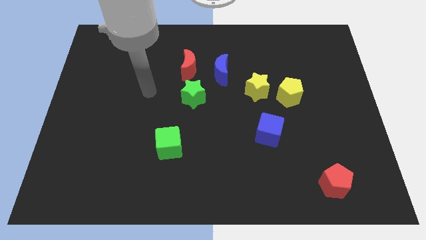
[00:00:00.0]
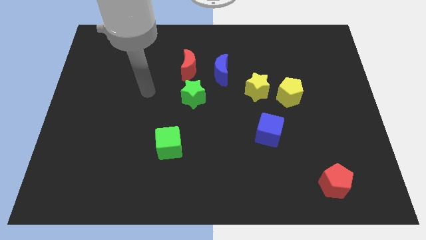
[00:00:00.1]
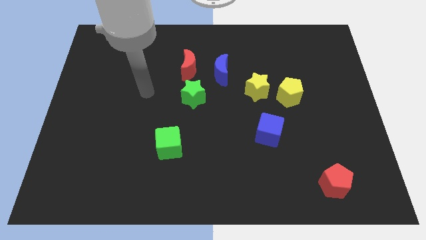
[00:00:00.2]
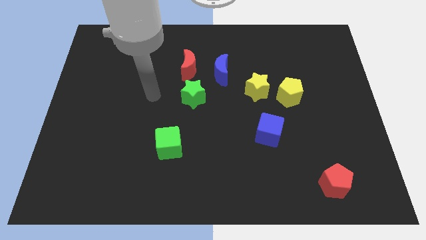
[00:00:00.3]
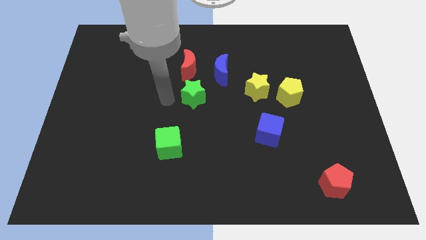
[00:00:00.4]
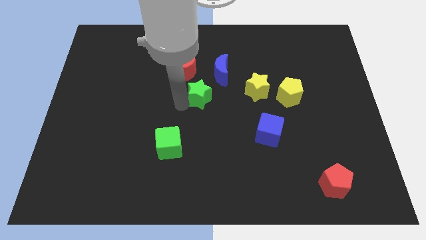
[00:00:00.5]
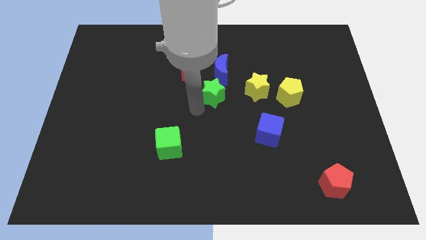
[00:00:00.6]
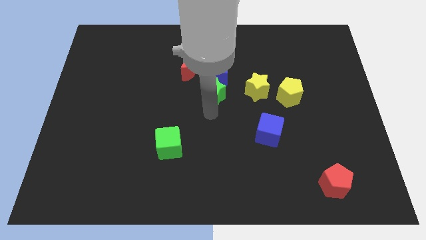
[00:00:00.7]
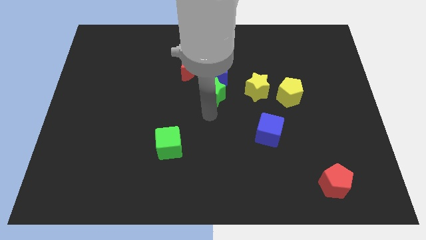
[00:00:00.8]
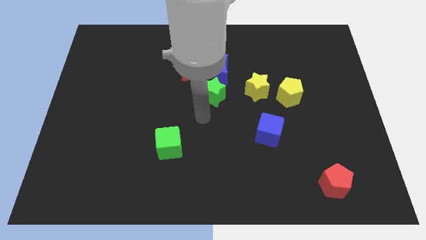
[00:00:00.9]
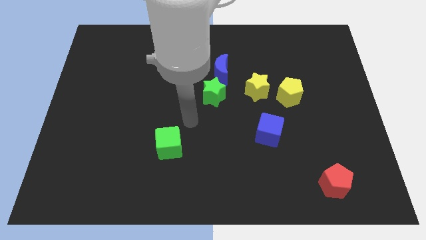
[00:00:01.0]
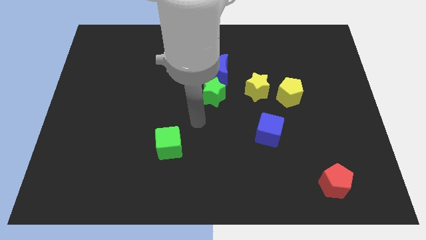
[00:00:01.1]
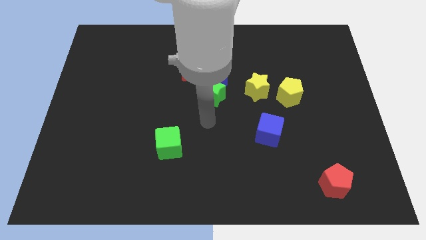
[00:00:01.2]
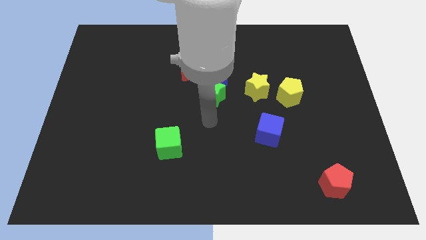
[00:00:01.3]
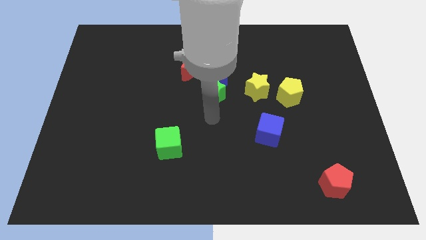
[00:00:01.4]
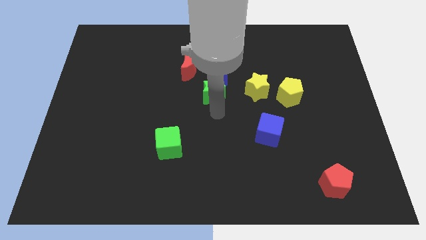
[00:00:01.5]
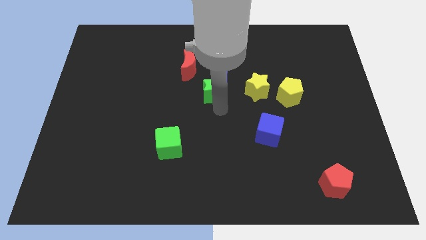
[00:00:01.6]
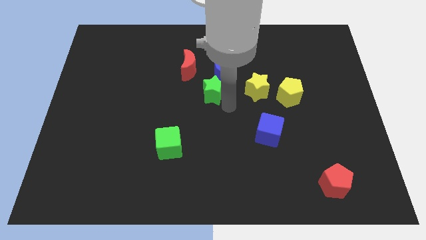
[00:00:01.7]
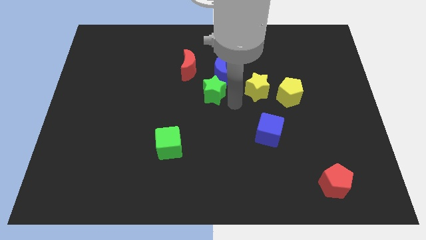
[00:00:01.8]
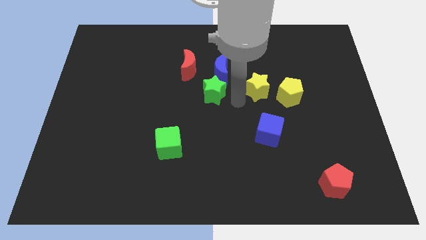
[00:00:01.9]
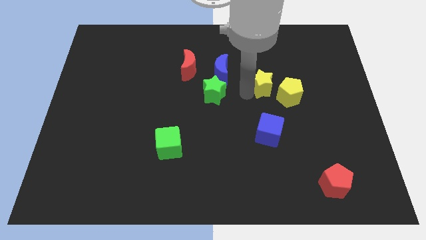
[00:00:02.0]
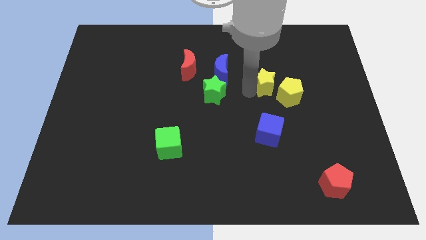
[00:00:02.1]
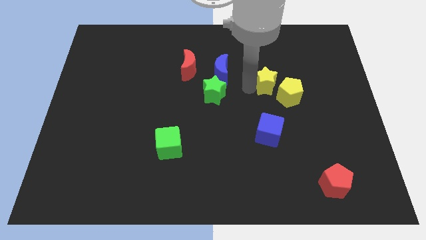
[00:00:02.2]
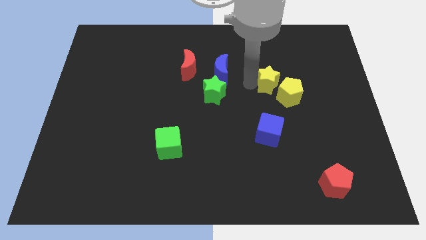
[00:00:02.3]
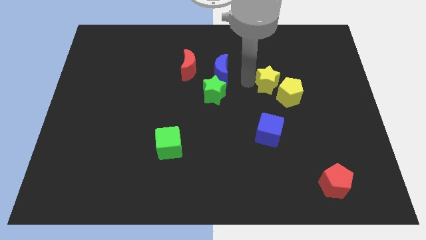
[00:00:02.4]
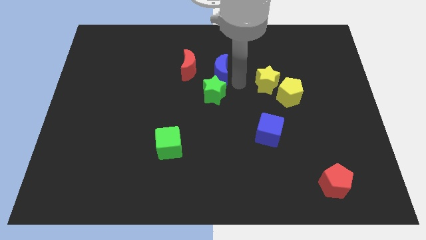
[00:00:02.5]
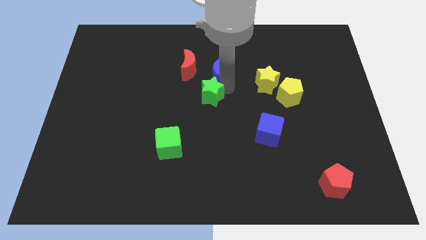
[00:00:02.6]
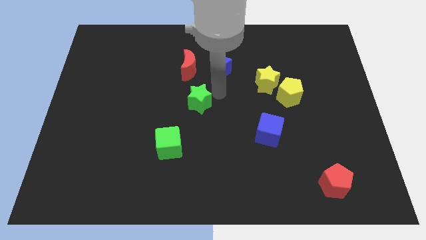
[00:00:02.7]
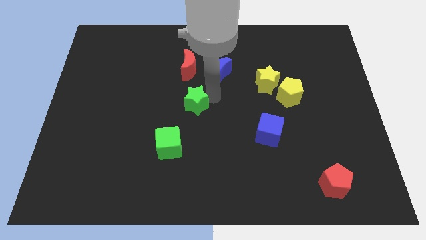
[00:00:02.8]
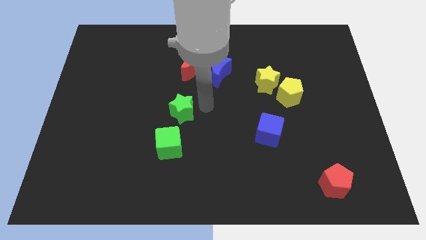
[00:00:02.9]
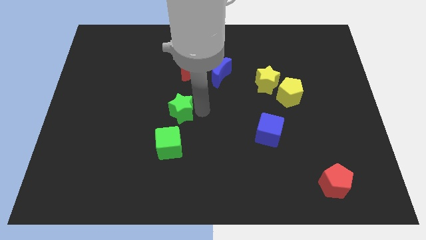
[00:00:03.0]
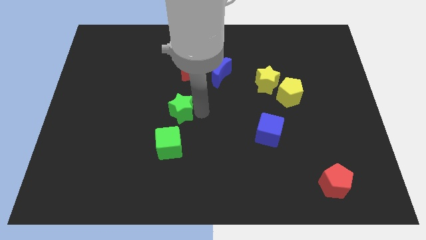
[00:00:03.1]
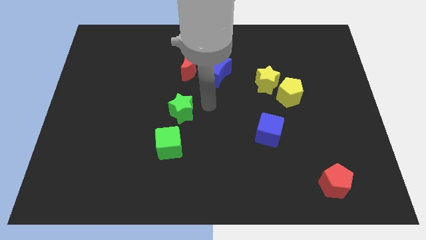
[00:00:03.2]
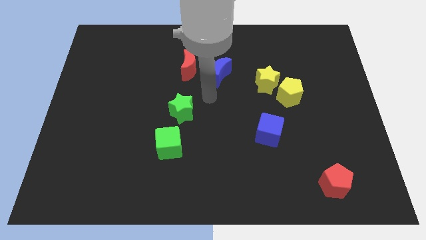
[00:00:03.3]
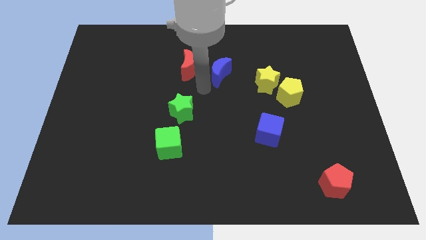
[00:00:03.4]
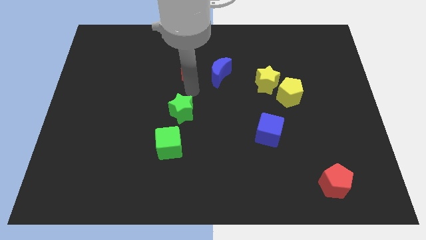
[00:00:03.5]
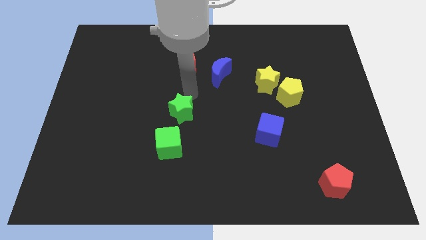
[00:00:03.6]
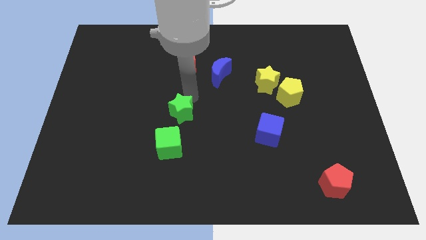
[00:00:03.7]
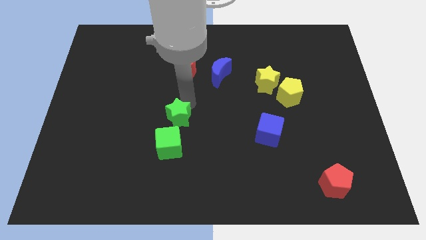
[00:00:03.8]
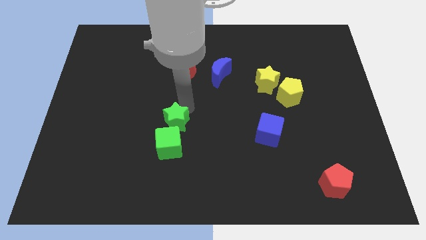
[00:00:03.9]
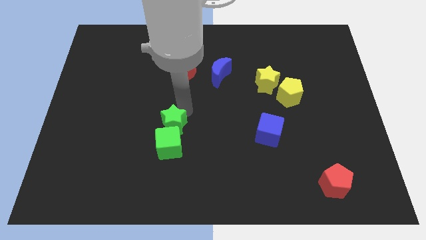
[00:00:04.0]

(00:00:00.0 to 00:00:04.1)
separate the green star from group of object

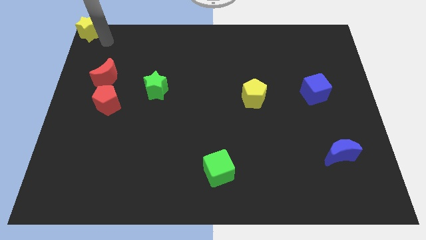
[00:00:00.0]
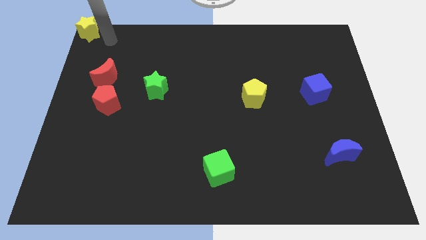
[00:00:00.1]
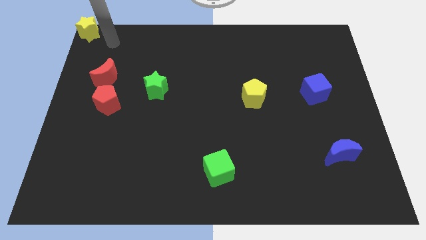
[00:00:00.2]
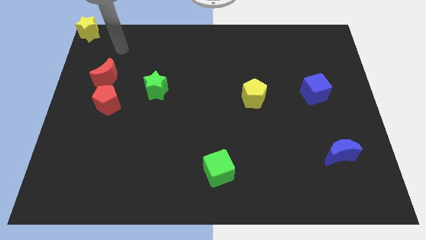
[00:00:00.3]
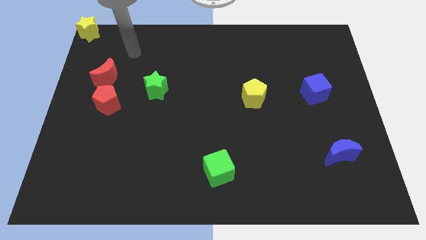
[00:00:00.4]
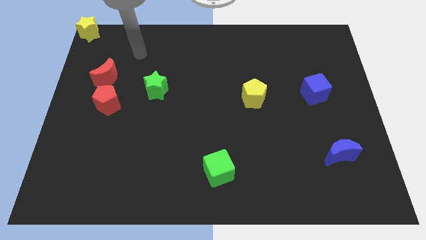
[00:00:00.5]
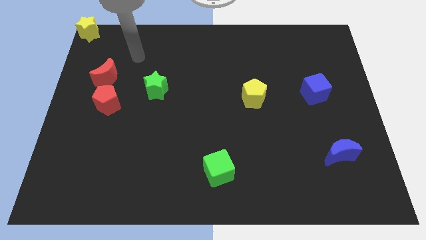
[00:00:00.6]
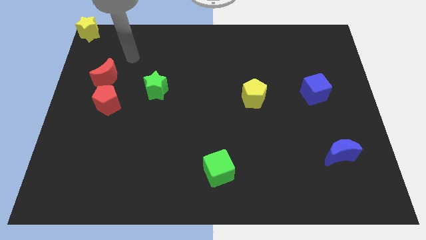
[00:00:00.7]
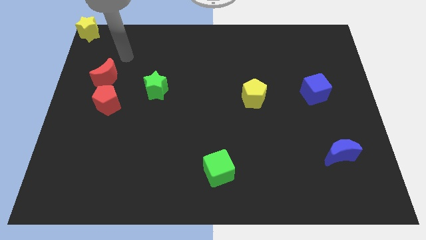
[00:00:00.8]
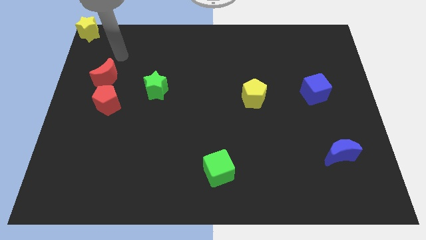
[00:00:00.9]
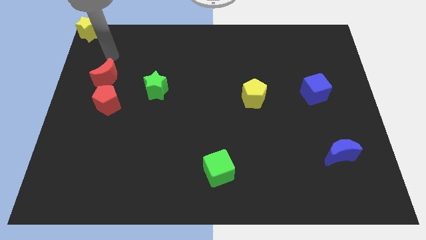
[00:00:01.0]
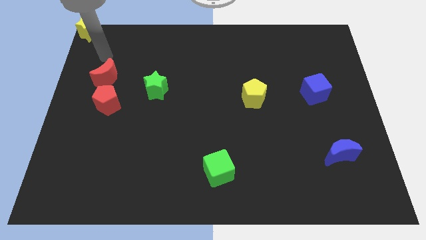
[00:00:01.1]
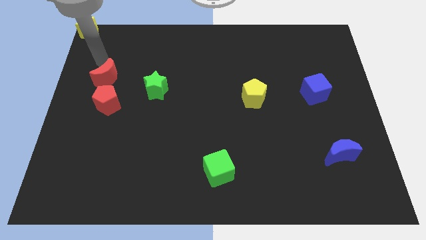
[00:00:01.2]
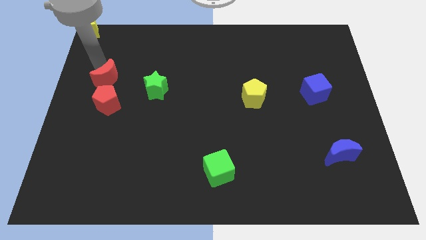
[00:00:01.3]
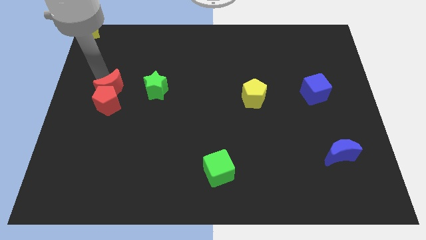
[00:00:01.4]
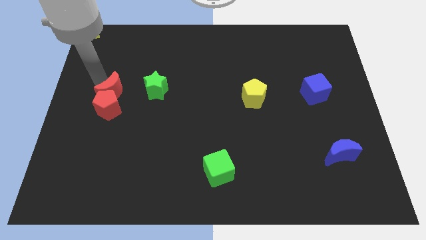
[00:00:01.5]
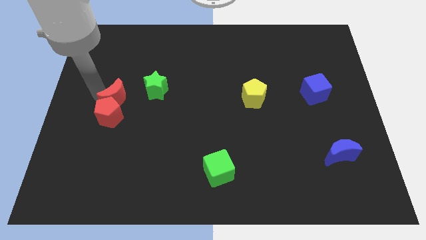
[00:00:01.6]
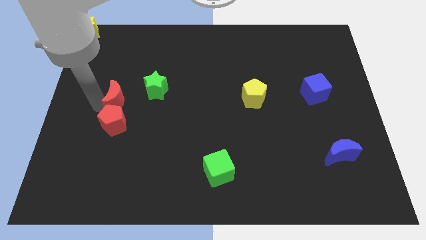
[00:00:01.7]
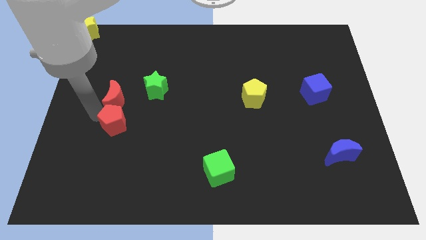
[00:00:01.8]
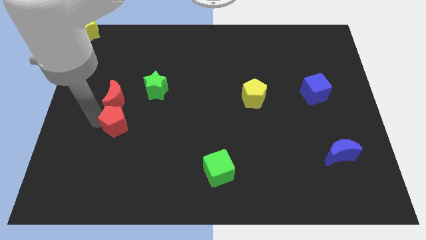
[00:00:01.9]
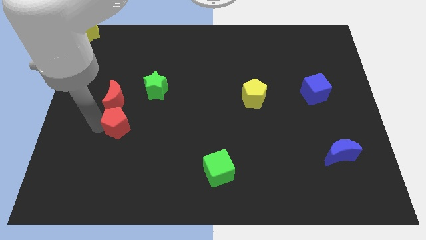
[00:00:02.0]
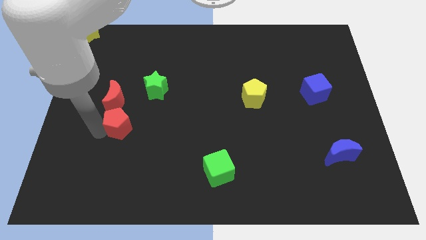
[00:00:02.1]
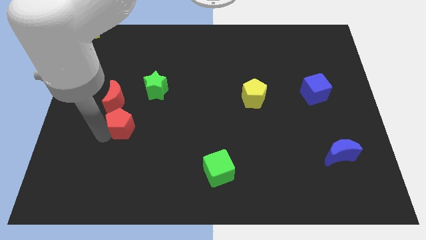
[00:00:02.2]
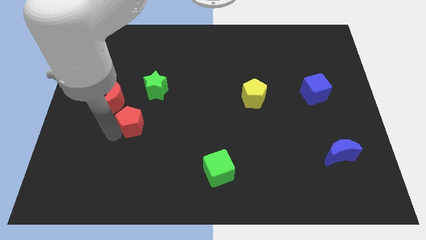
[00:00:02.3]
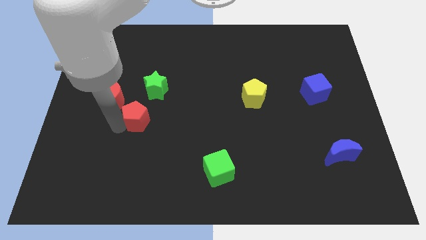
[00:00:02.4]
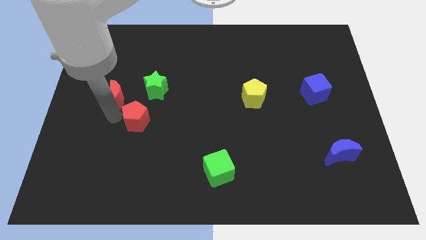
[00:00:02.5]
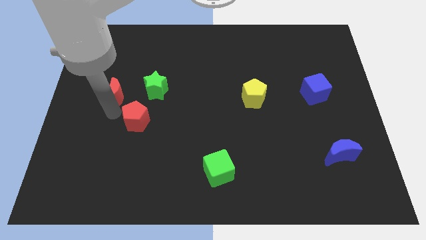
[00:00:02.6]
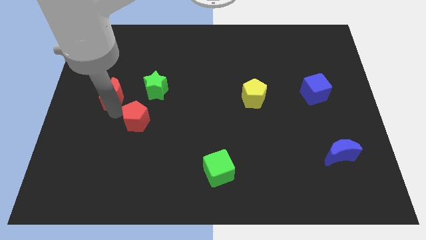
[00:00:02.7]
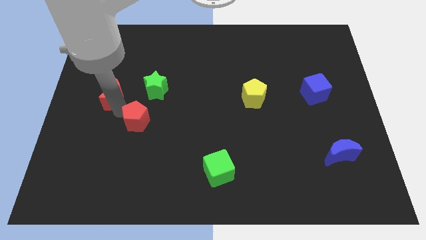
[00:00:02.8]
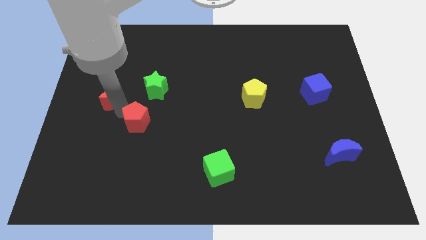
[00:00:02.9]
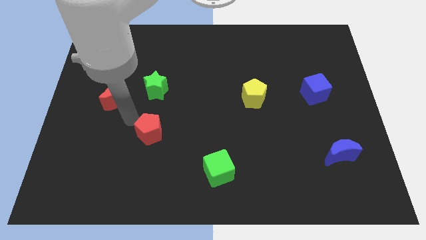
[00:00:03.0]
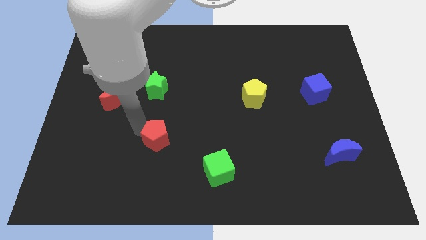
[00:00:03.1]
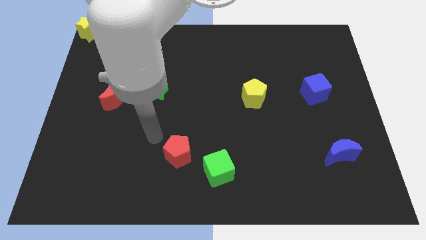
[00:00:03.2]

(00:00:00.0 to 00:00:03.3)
separate both the red blocks to each other

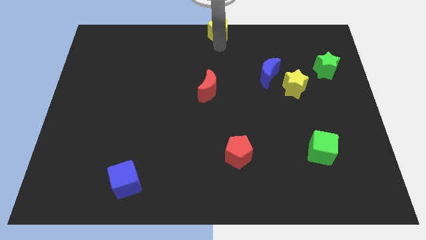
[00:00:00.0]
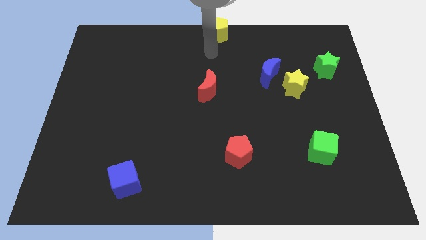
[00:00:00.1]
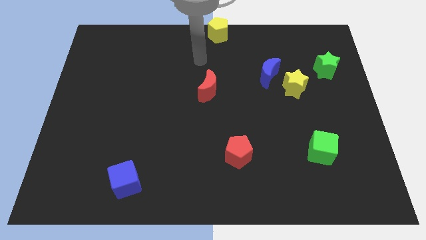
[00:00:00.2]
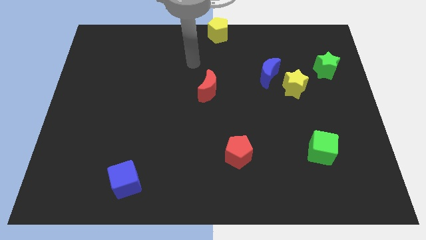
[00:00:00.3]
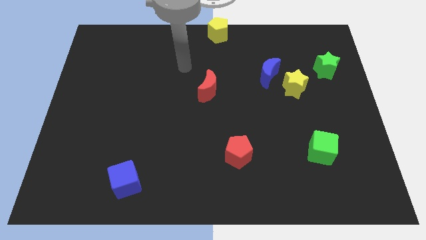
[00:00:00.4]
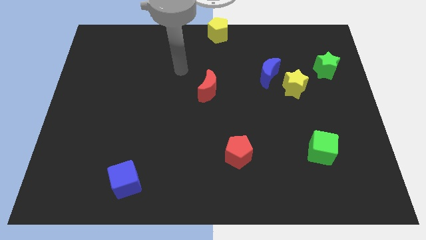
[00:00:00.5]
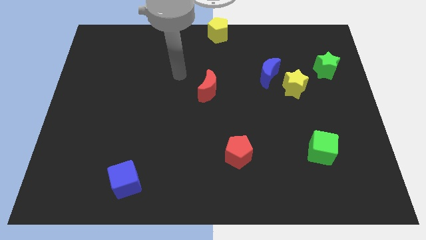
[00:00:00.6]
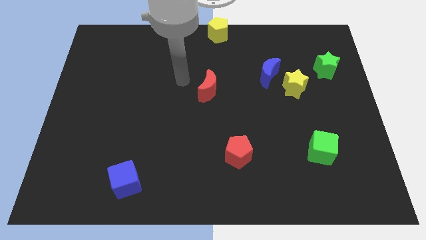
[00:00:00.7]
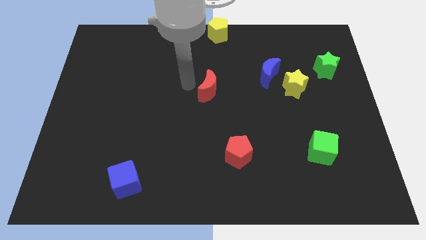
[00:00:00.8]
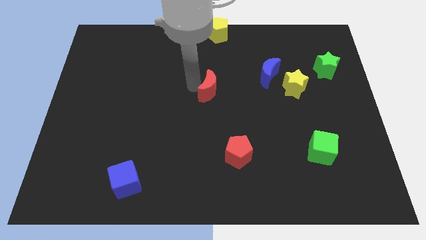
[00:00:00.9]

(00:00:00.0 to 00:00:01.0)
move your arm away from yellow pentagon

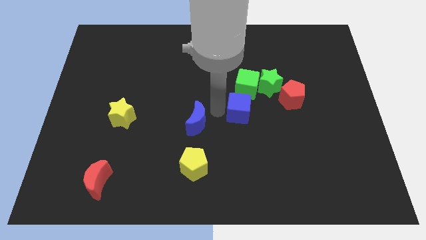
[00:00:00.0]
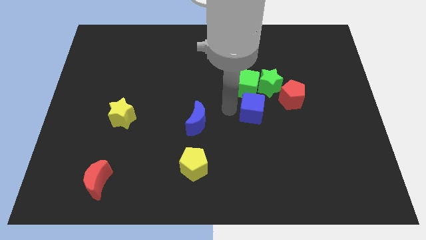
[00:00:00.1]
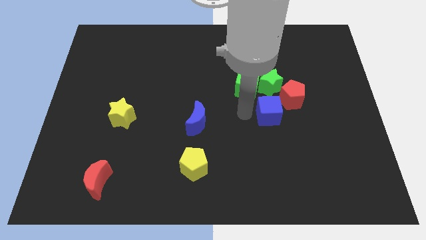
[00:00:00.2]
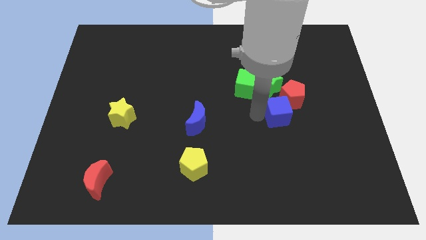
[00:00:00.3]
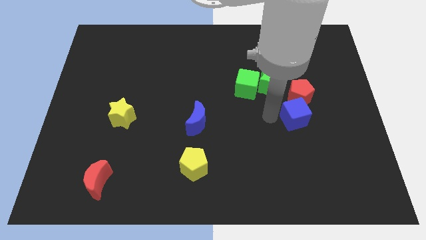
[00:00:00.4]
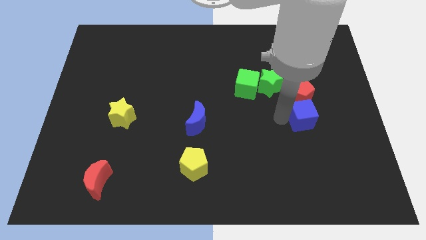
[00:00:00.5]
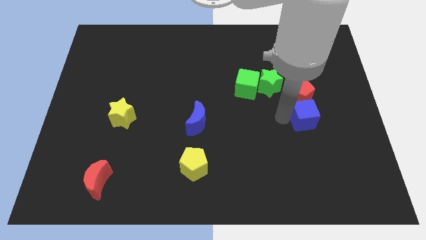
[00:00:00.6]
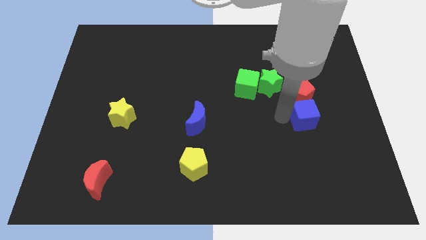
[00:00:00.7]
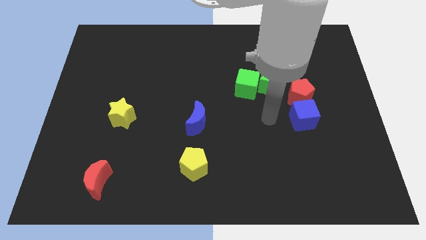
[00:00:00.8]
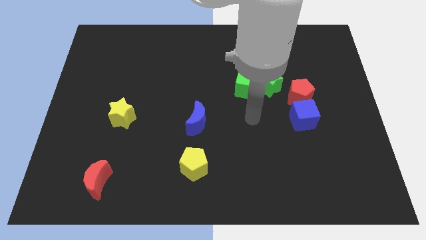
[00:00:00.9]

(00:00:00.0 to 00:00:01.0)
move the blue cube to the bottom of the red pentagon
